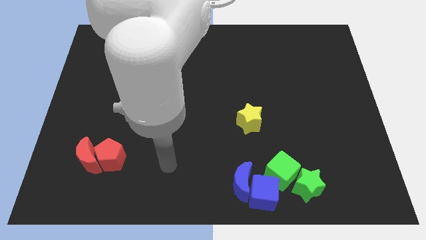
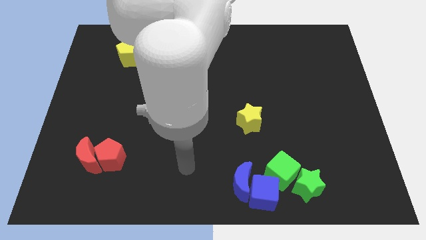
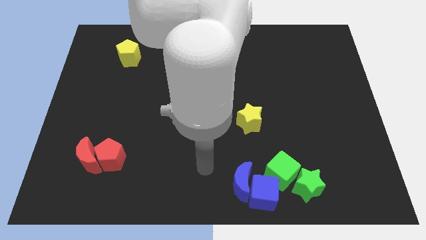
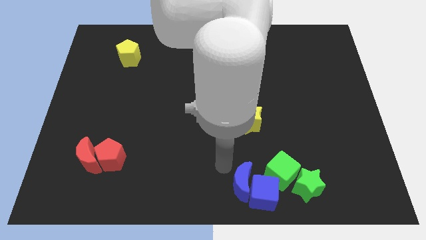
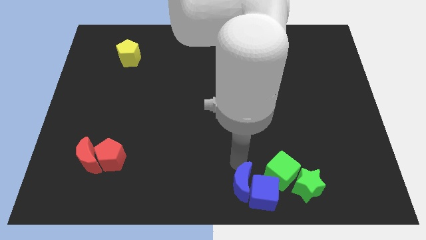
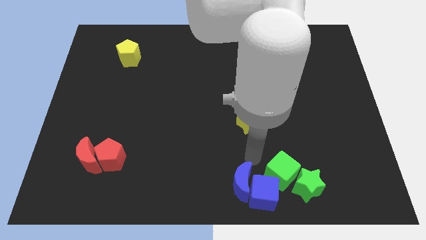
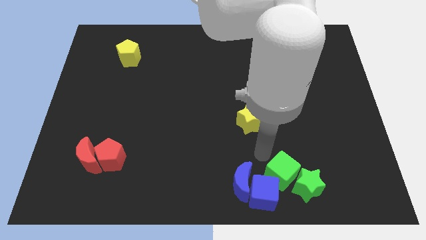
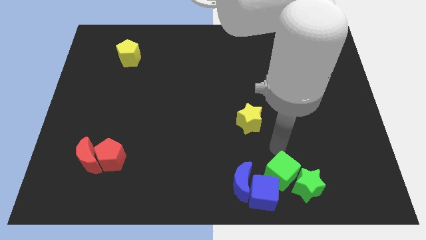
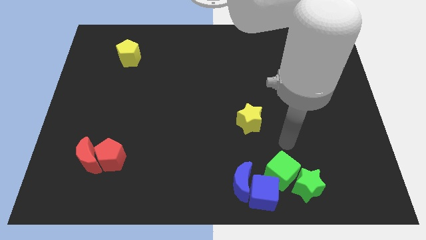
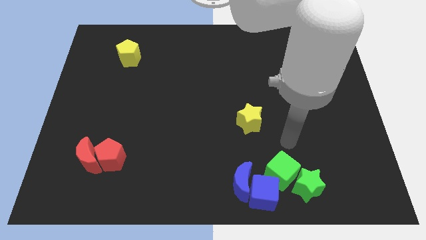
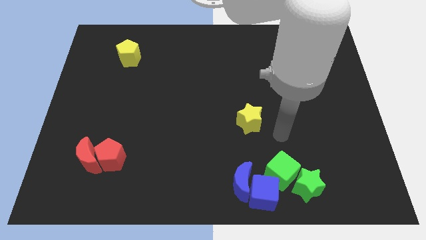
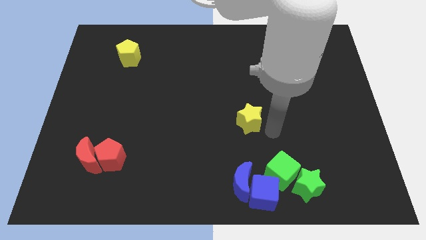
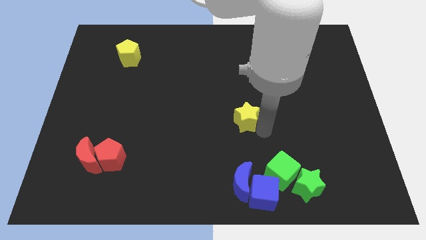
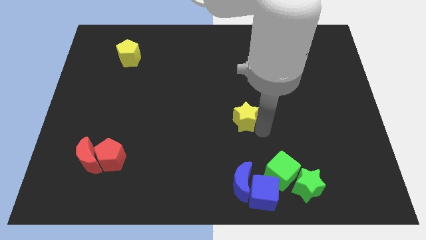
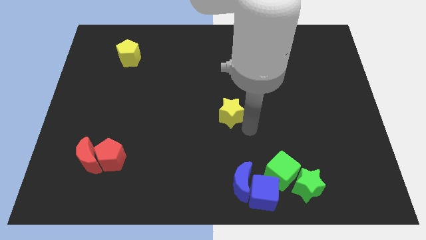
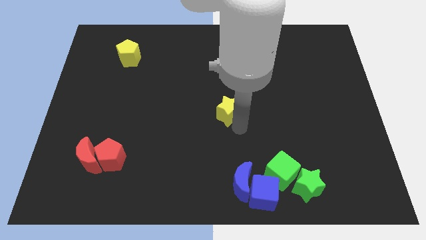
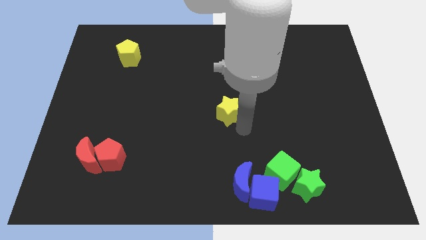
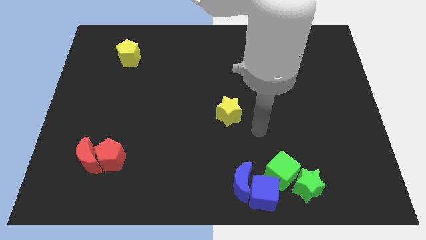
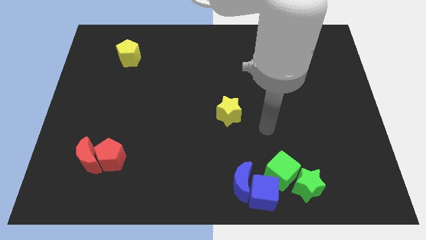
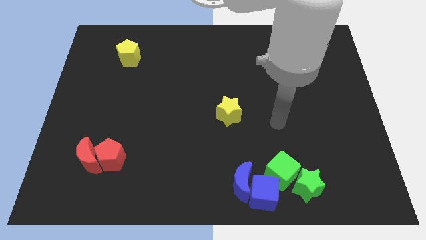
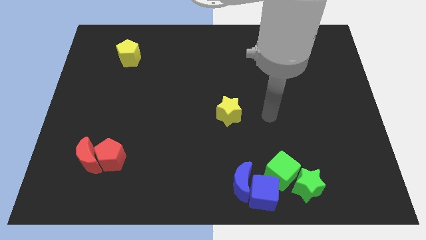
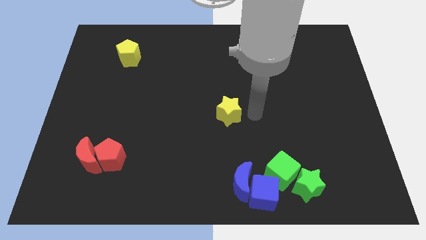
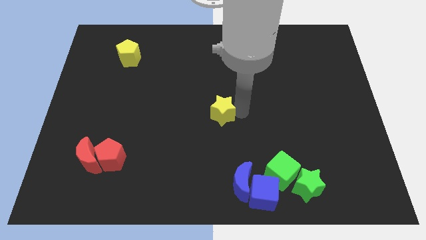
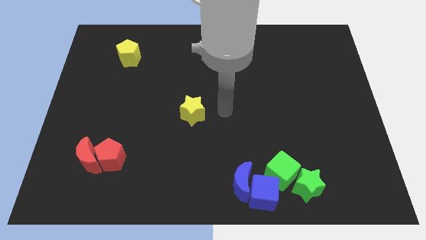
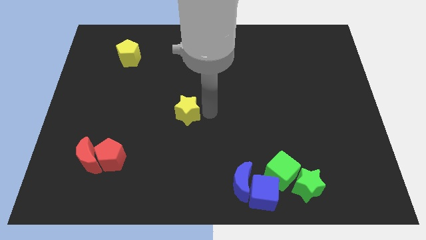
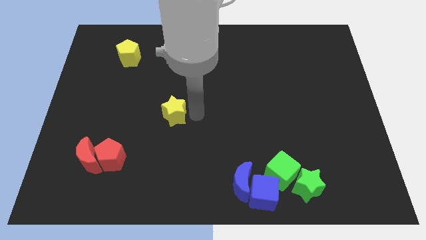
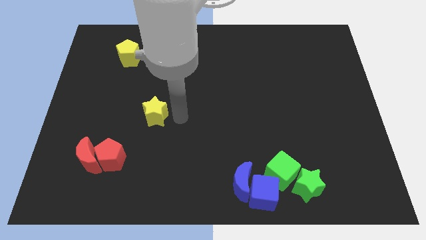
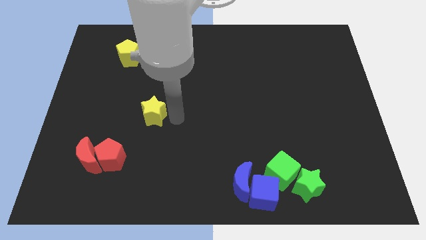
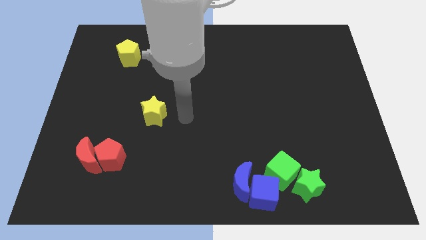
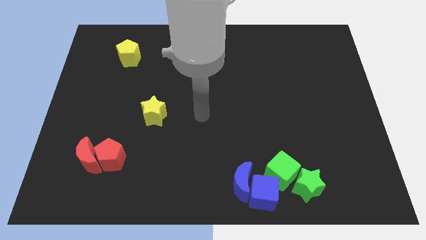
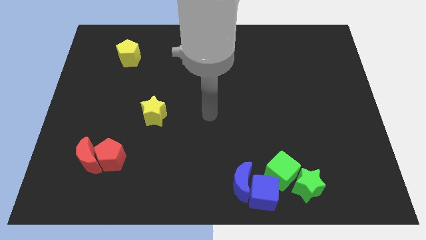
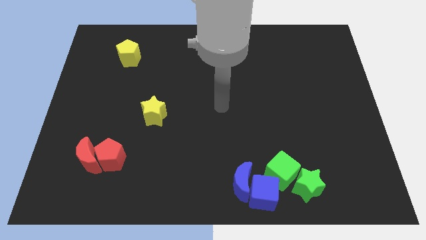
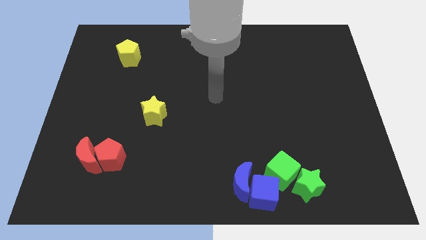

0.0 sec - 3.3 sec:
slide the yellow star to the left

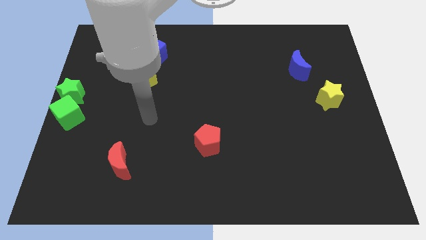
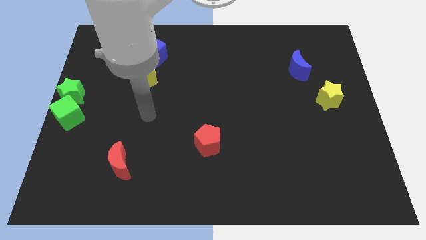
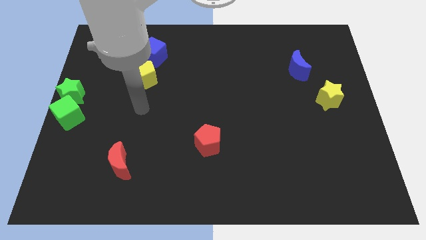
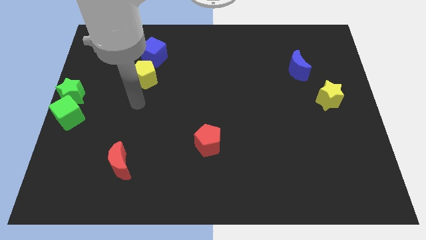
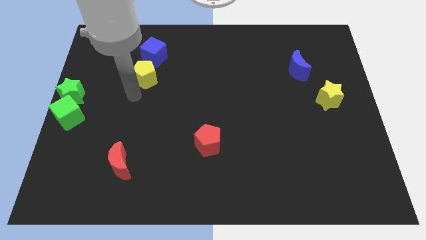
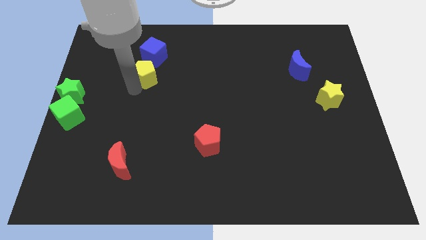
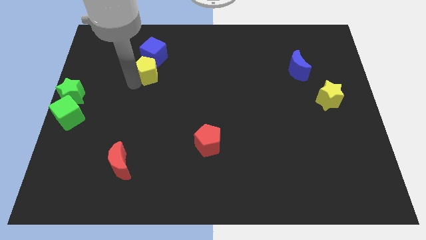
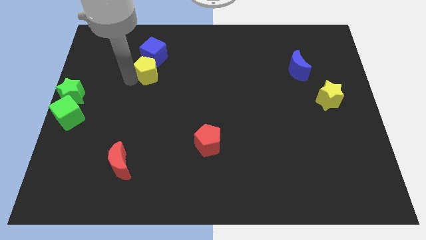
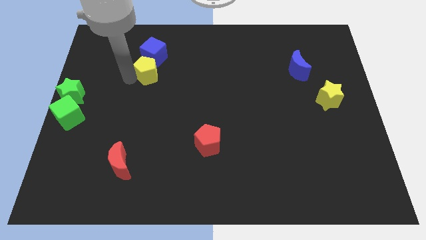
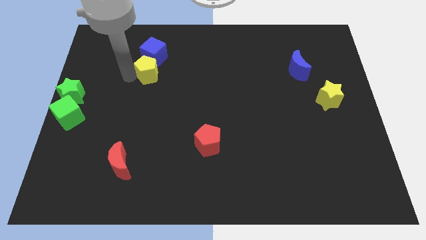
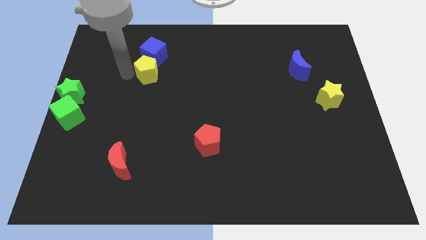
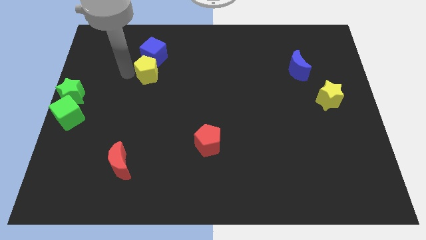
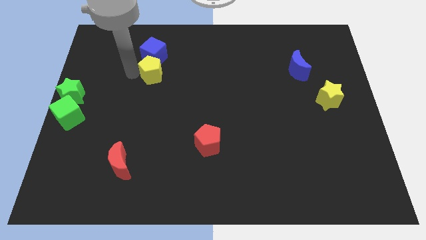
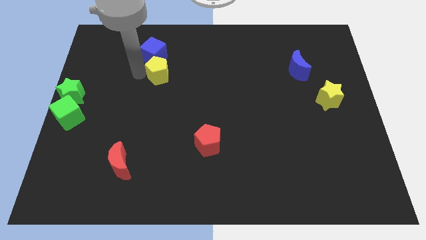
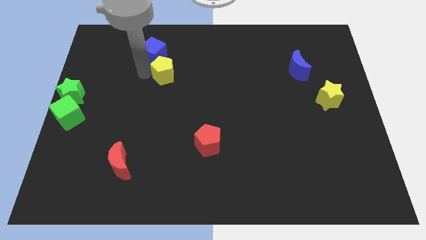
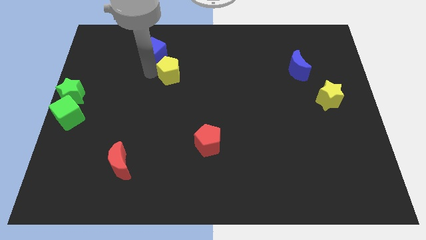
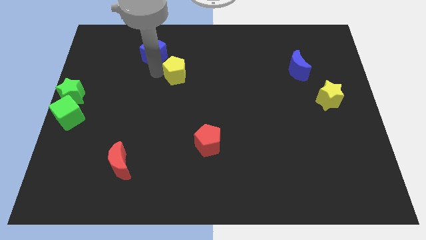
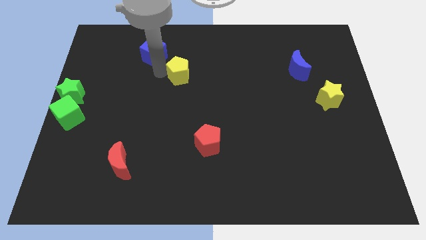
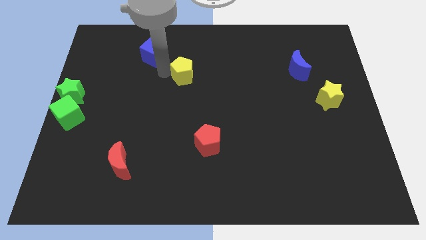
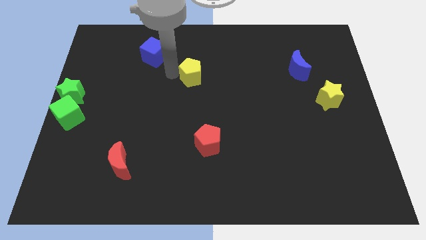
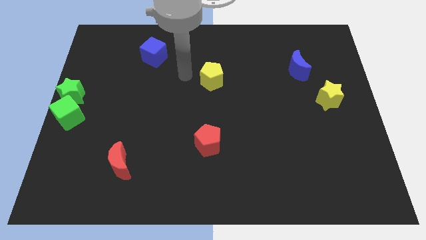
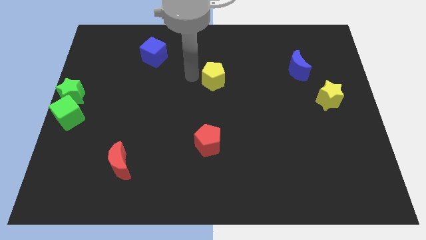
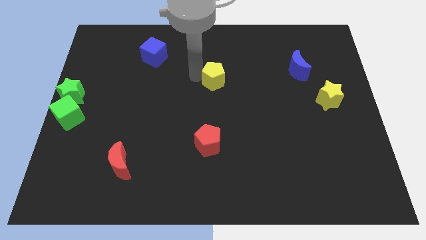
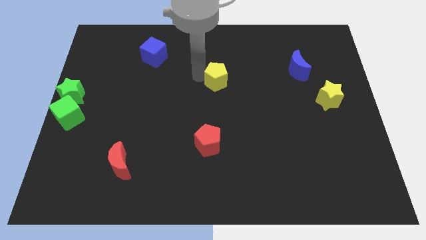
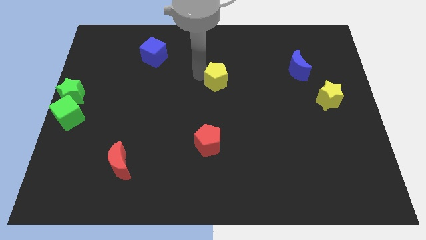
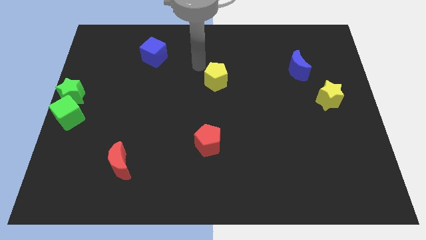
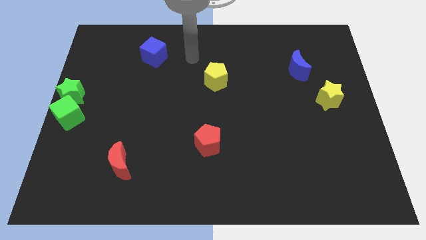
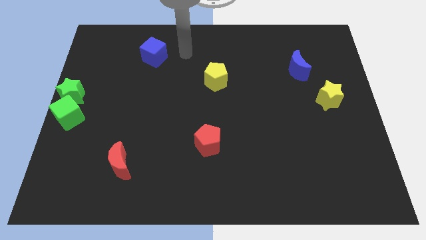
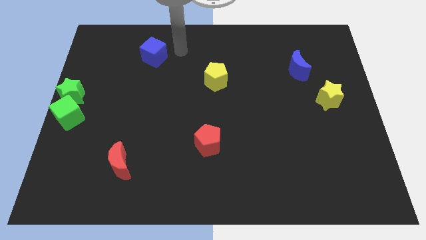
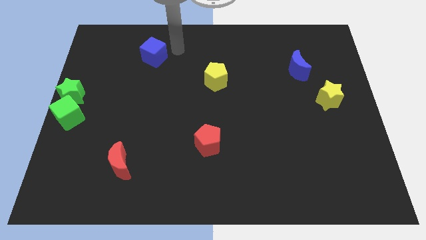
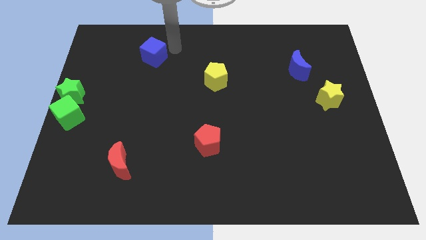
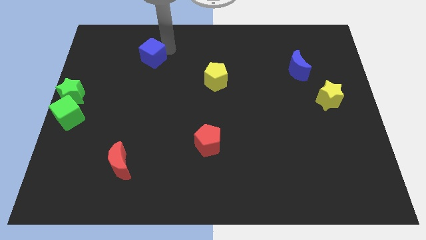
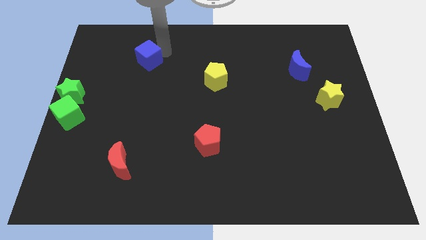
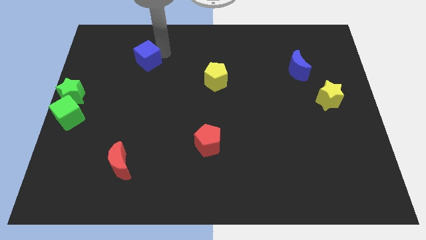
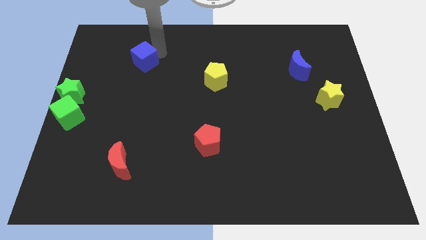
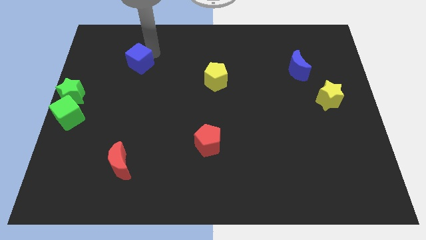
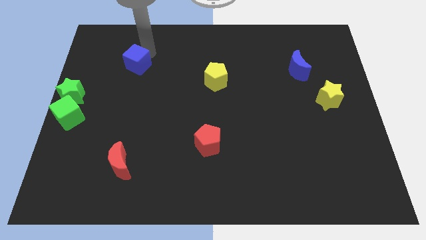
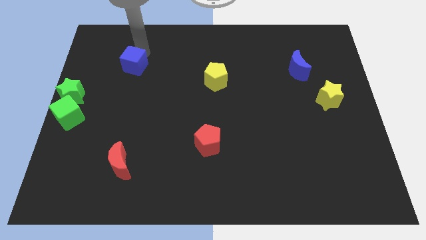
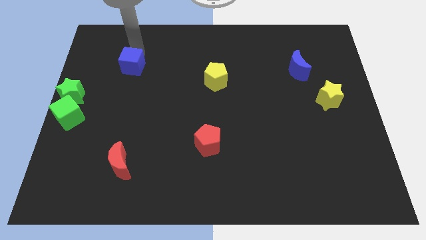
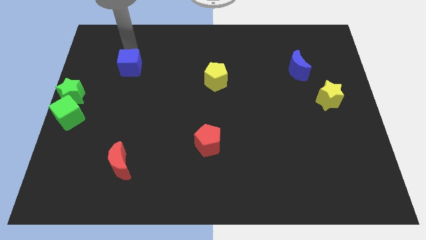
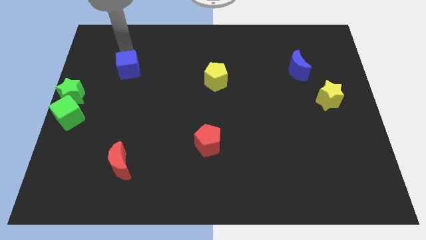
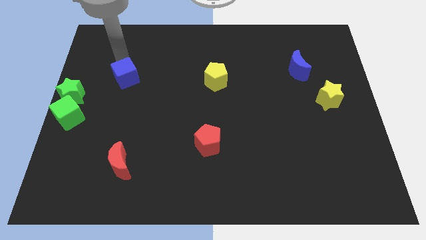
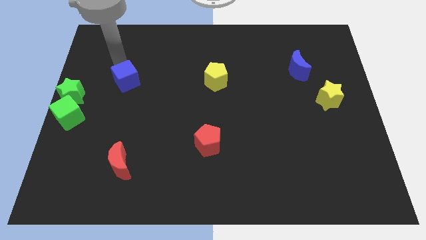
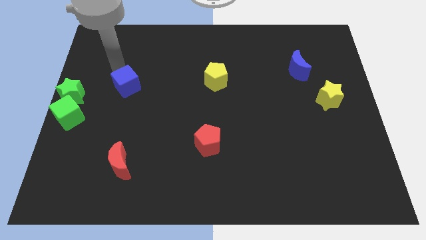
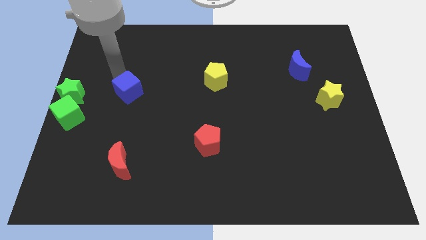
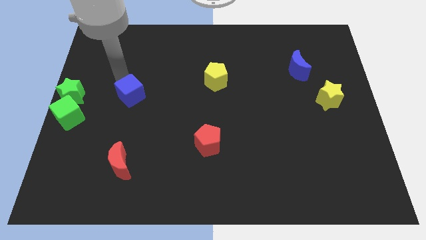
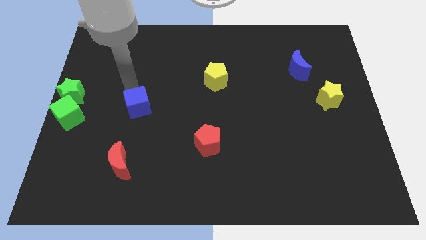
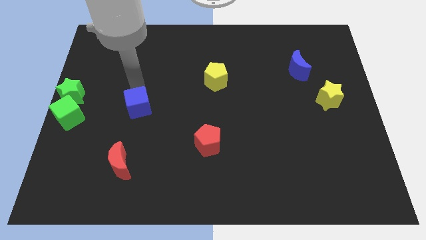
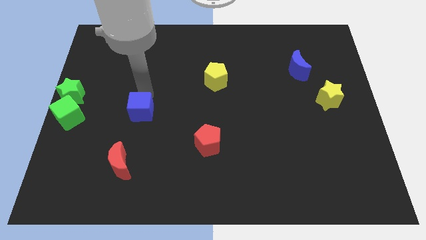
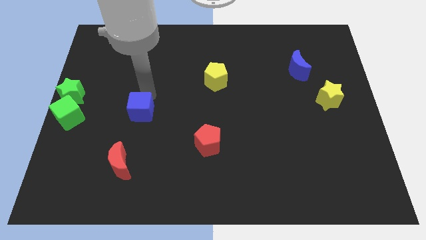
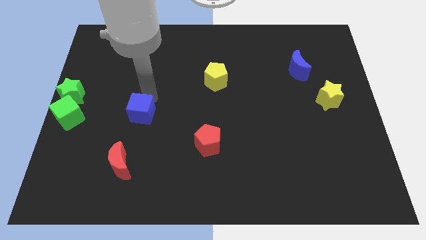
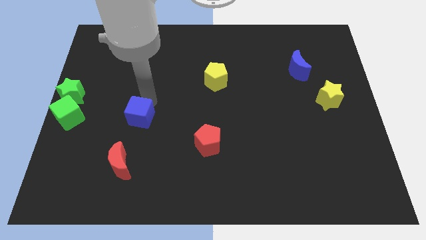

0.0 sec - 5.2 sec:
slide the blue cube towards the bottom side of the board

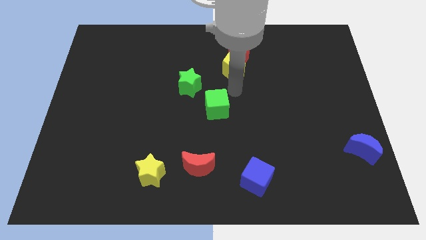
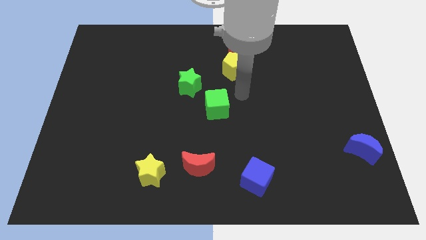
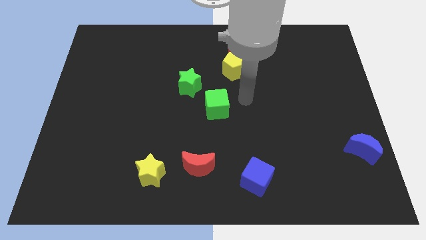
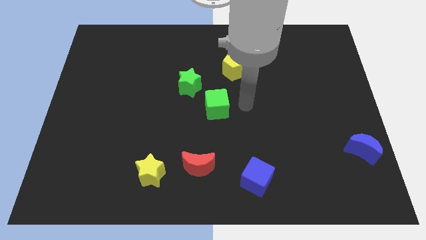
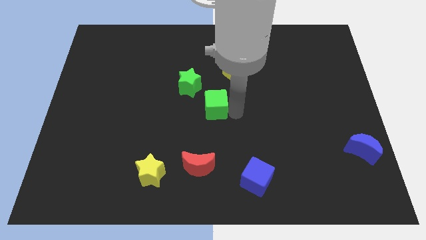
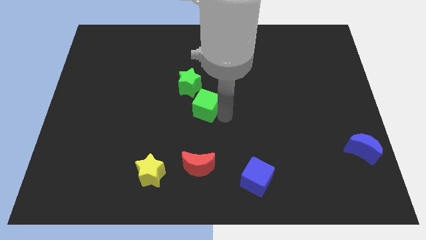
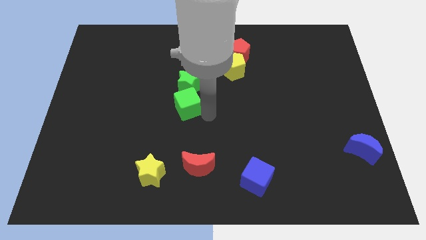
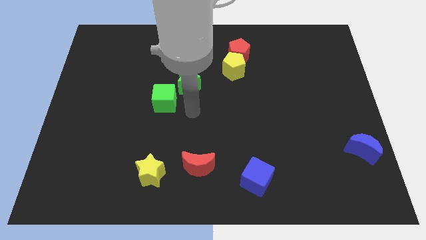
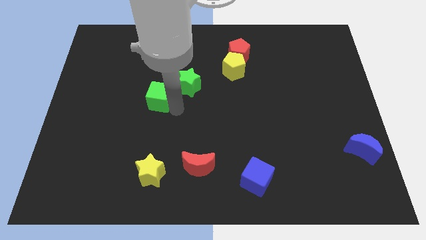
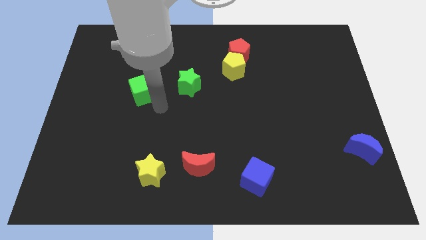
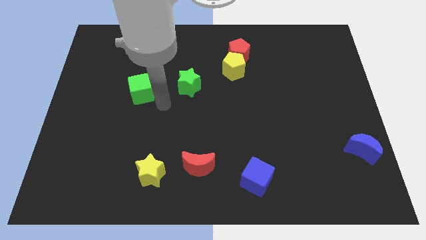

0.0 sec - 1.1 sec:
push the green cube slightly to the left
